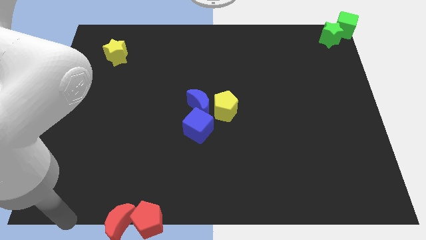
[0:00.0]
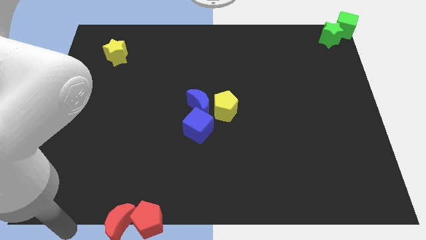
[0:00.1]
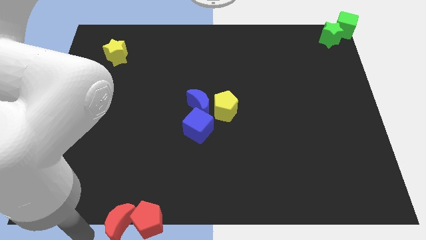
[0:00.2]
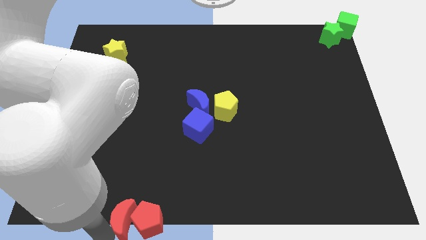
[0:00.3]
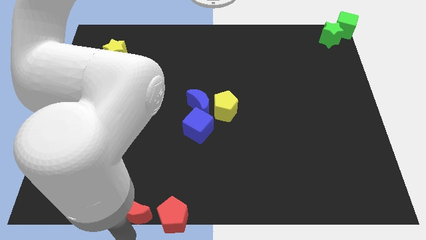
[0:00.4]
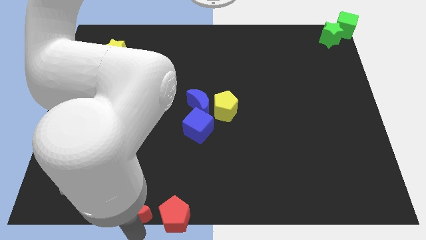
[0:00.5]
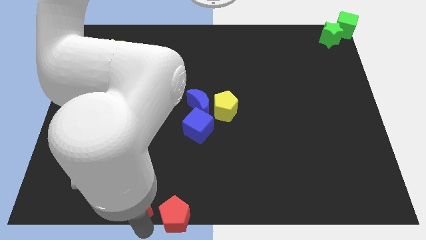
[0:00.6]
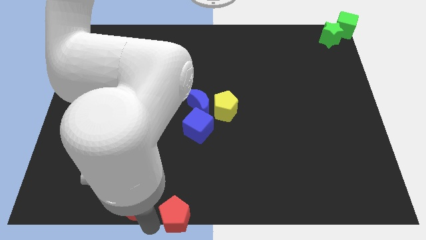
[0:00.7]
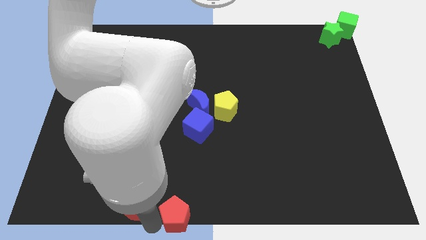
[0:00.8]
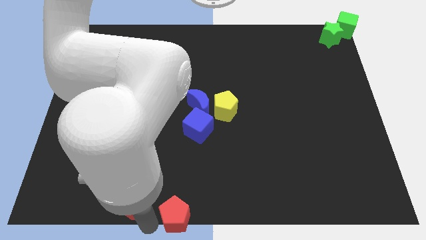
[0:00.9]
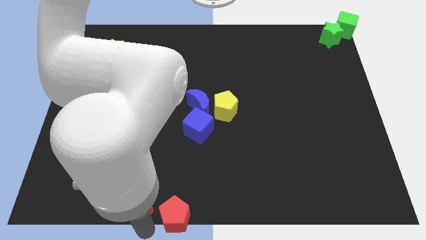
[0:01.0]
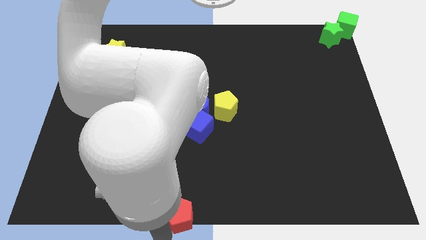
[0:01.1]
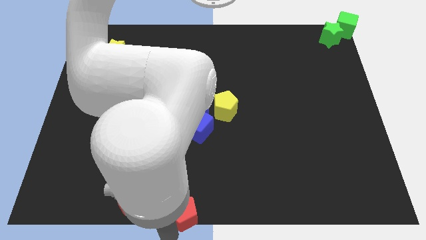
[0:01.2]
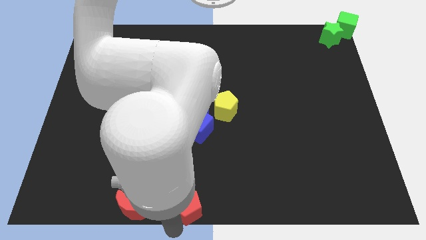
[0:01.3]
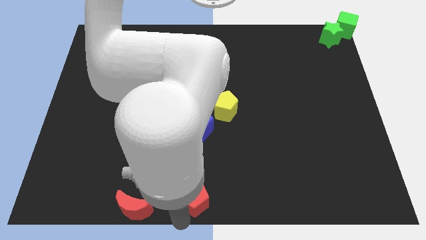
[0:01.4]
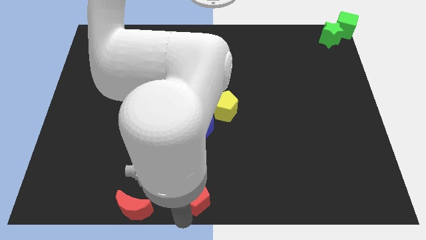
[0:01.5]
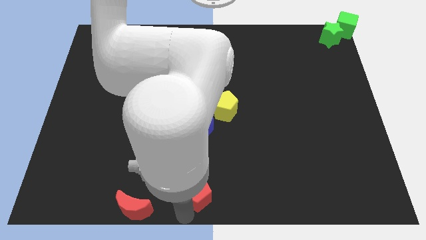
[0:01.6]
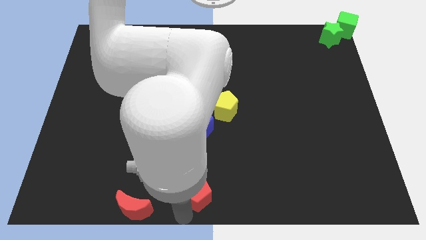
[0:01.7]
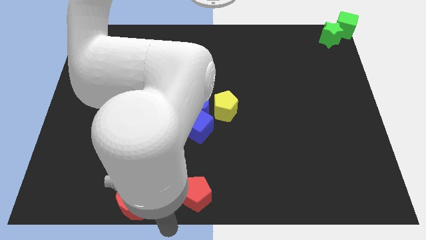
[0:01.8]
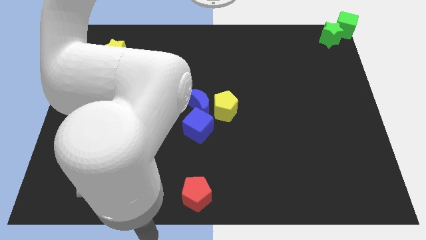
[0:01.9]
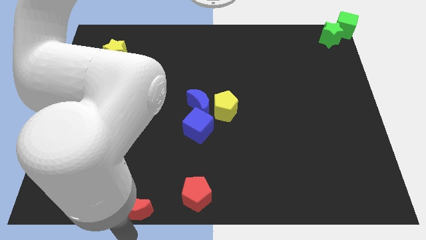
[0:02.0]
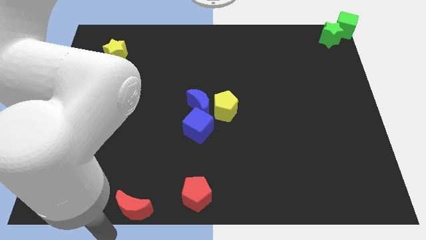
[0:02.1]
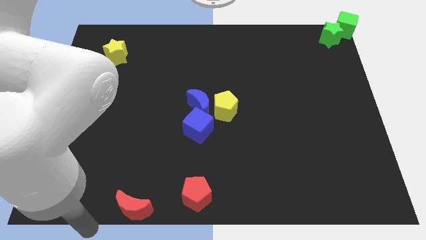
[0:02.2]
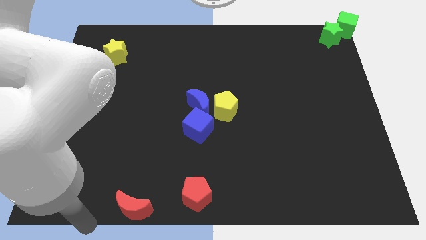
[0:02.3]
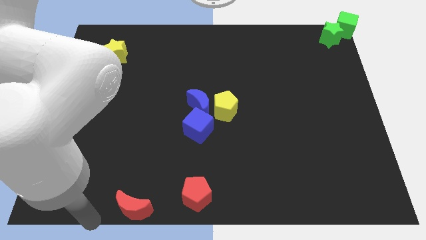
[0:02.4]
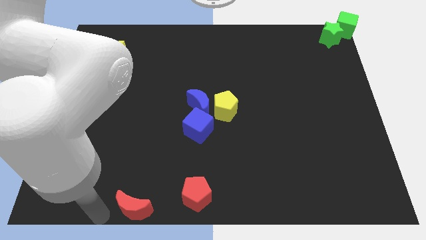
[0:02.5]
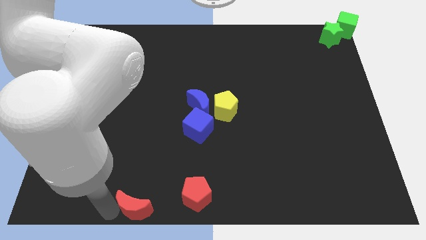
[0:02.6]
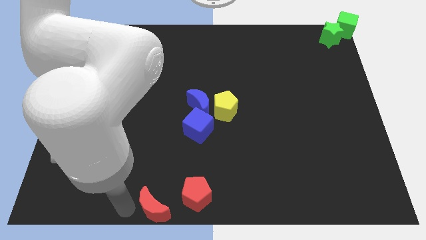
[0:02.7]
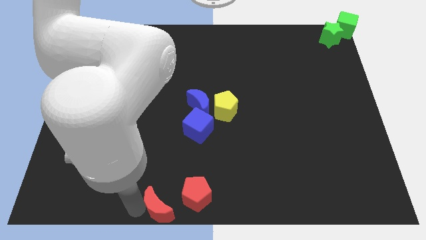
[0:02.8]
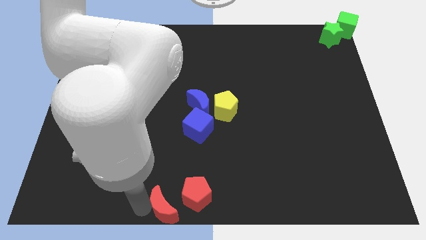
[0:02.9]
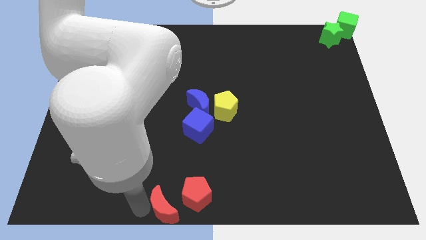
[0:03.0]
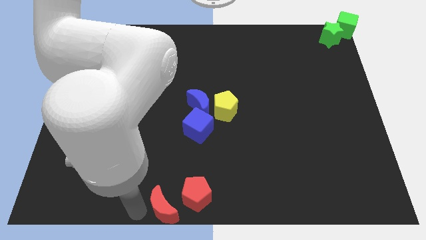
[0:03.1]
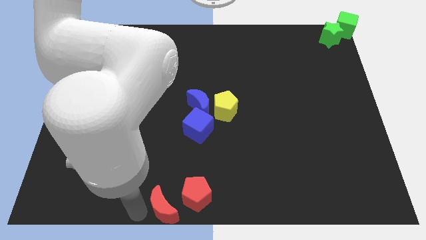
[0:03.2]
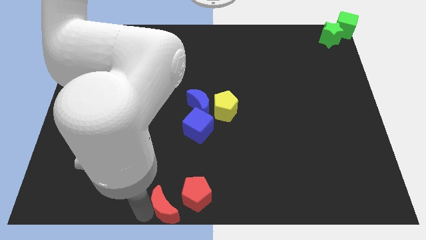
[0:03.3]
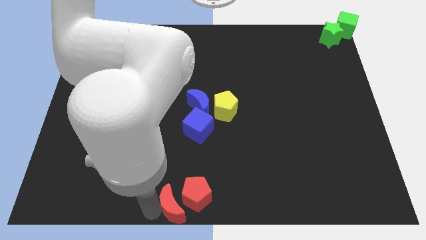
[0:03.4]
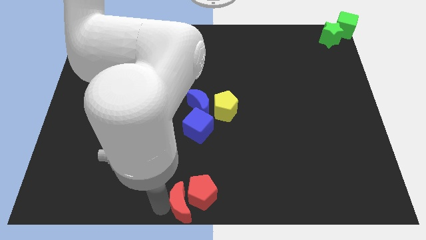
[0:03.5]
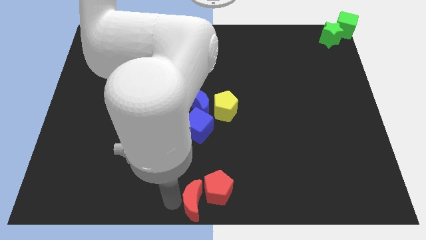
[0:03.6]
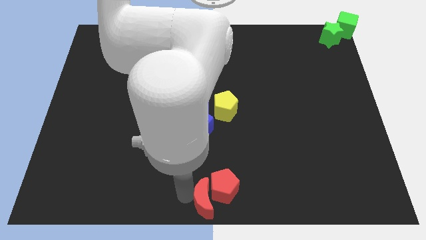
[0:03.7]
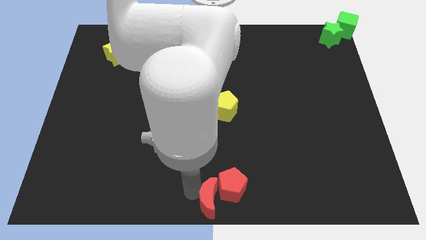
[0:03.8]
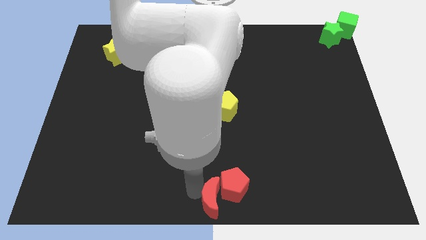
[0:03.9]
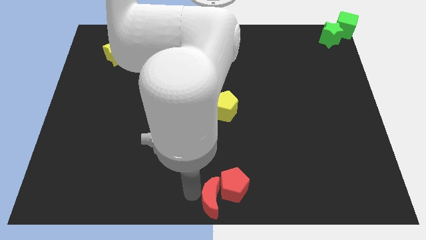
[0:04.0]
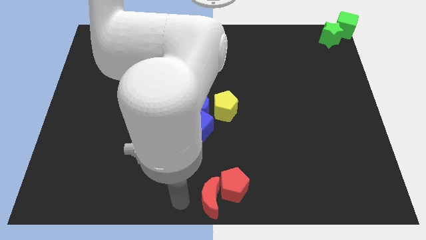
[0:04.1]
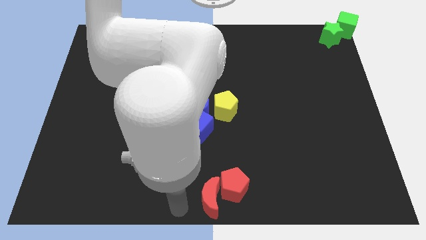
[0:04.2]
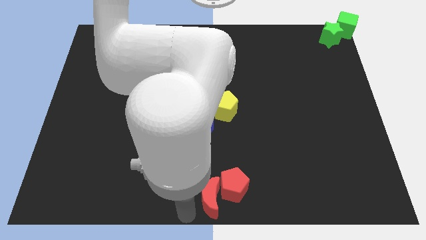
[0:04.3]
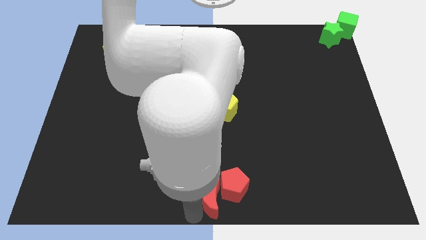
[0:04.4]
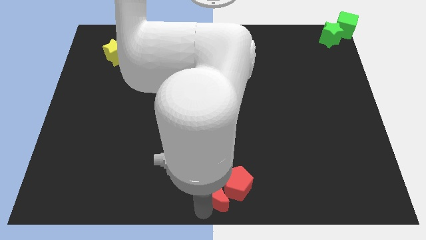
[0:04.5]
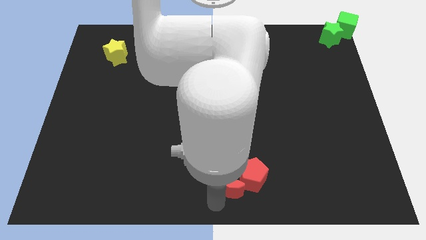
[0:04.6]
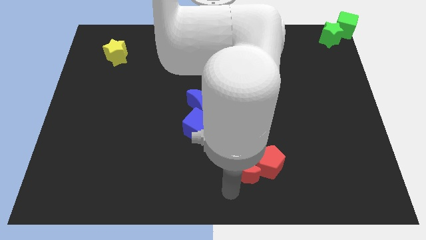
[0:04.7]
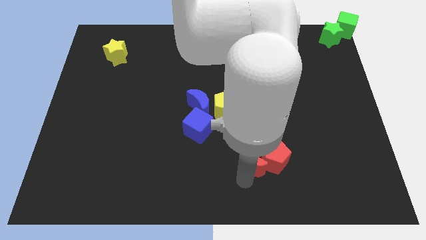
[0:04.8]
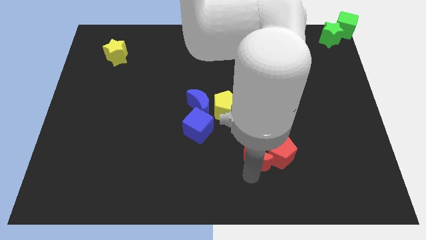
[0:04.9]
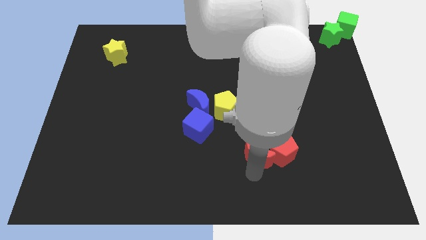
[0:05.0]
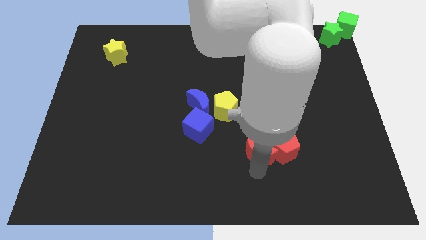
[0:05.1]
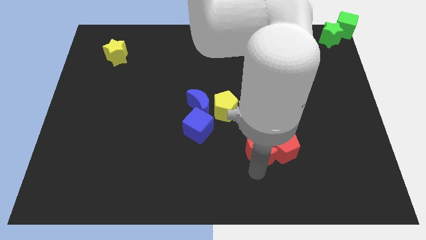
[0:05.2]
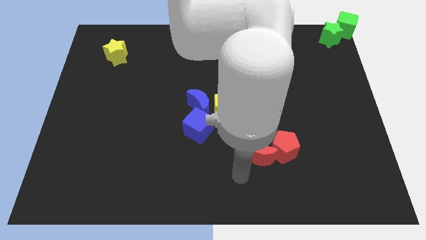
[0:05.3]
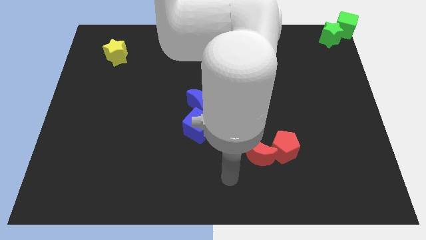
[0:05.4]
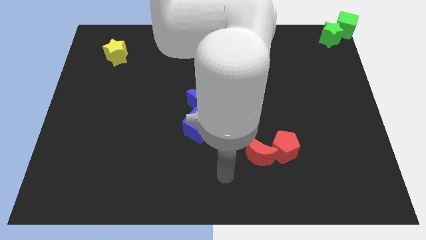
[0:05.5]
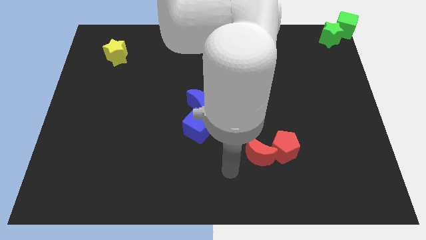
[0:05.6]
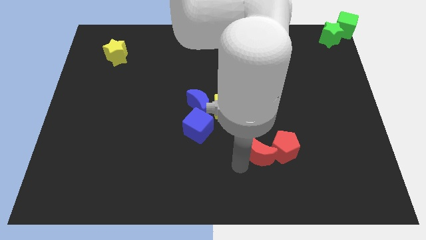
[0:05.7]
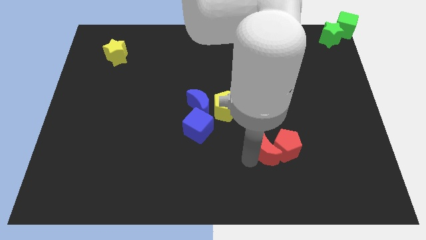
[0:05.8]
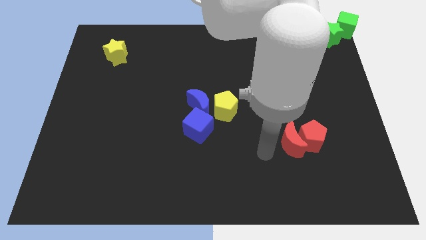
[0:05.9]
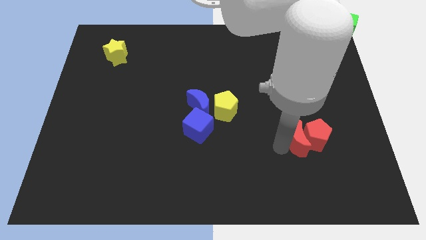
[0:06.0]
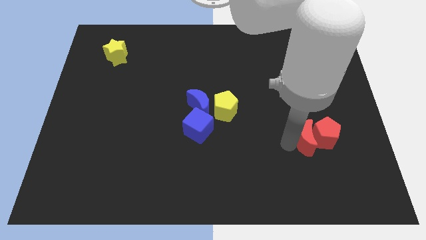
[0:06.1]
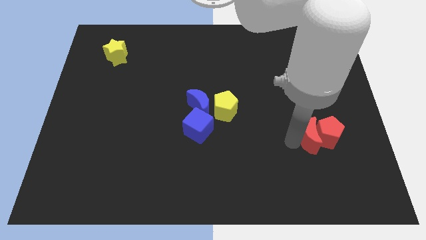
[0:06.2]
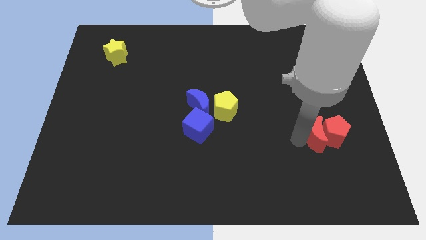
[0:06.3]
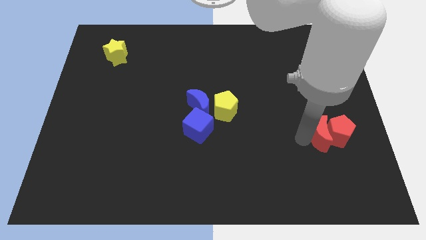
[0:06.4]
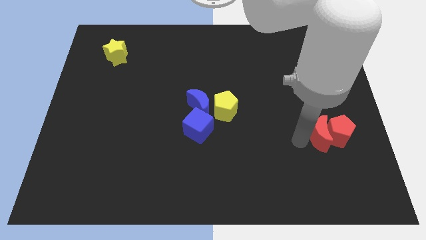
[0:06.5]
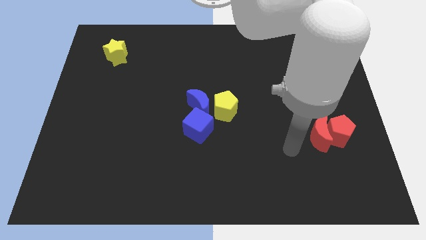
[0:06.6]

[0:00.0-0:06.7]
push two red blocks towards up

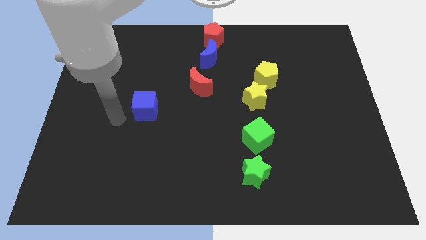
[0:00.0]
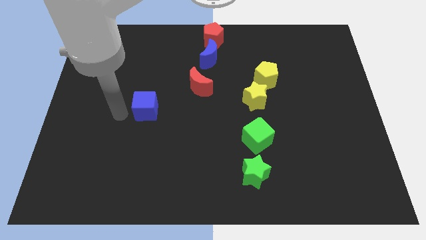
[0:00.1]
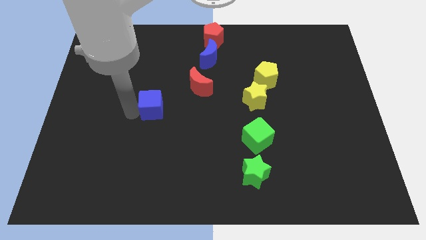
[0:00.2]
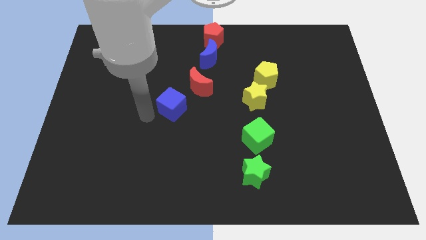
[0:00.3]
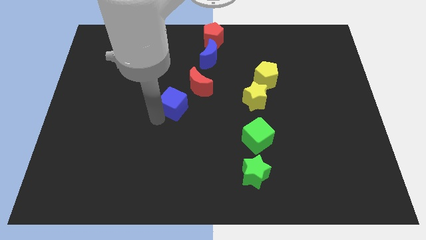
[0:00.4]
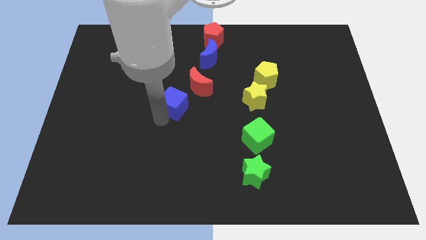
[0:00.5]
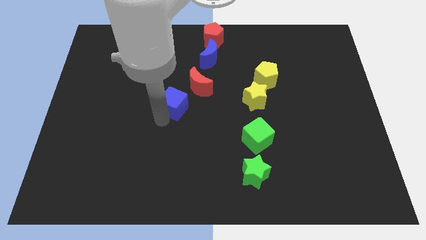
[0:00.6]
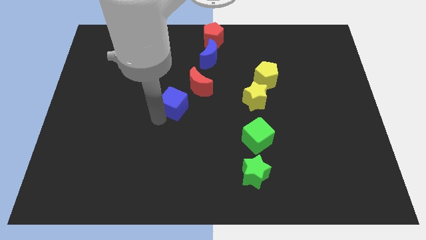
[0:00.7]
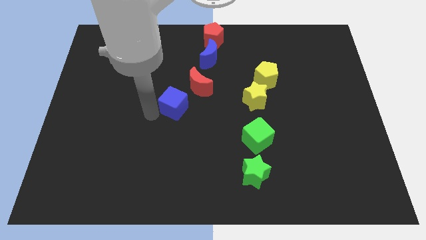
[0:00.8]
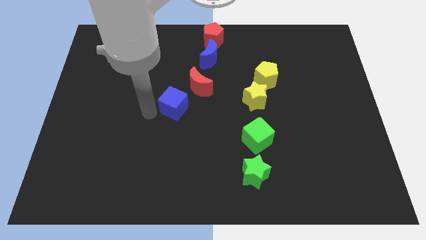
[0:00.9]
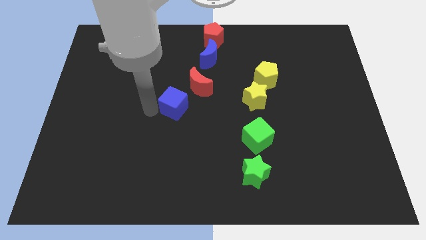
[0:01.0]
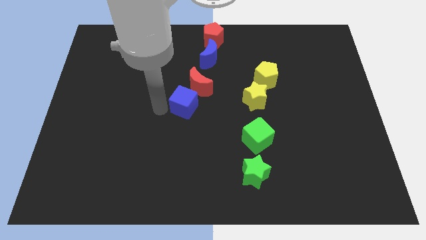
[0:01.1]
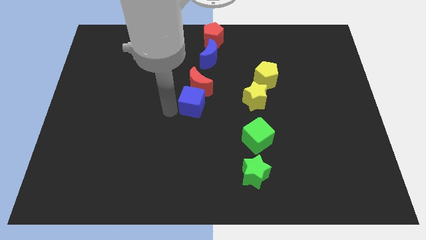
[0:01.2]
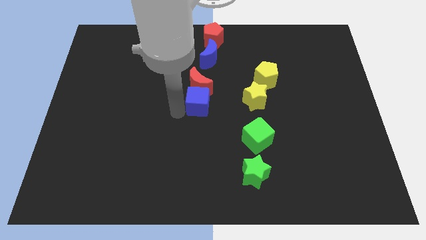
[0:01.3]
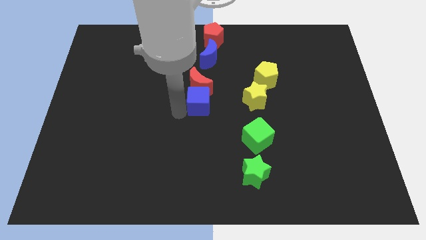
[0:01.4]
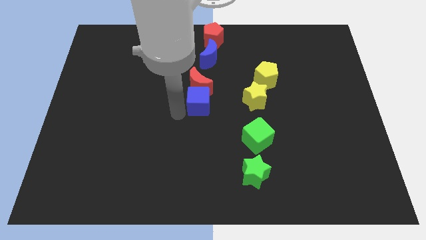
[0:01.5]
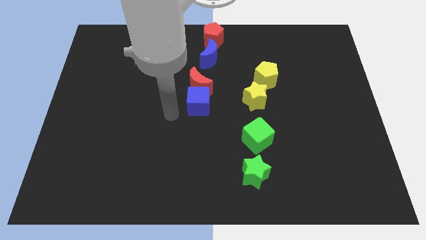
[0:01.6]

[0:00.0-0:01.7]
move the blue cube below to the red crescent

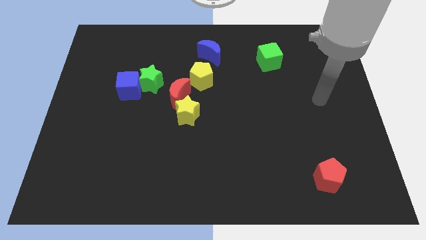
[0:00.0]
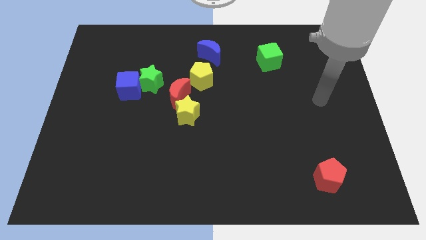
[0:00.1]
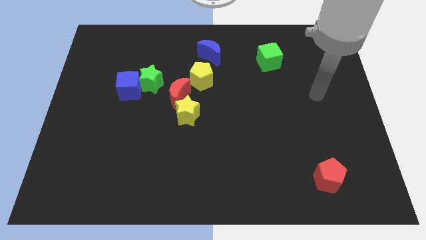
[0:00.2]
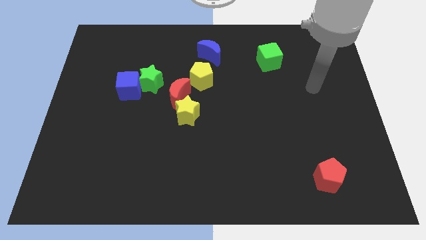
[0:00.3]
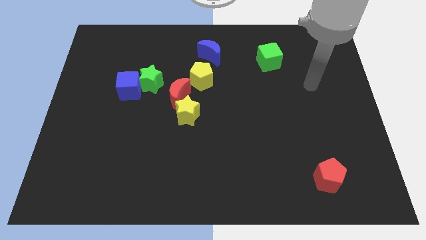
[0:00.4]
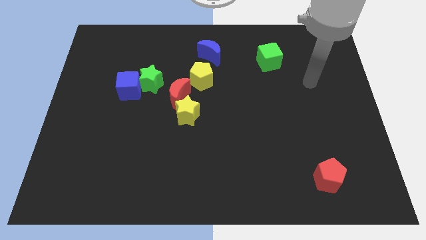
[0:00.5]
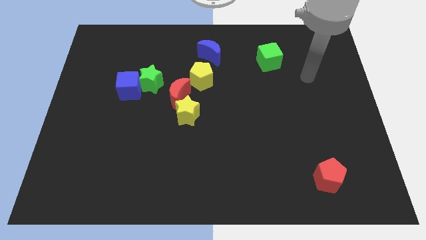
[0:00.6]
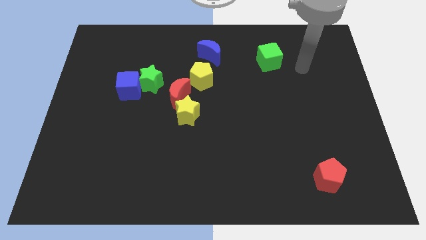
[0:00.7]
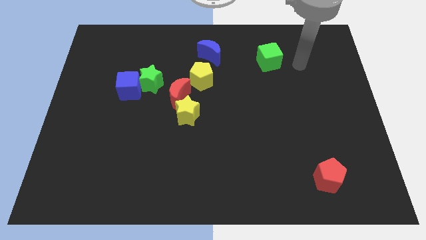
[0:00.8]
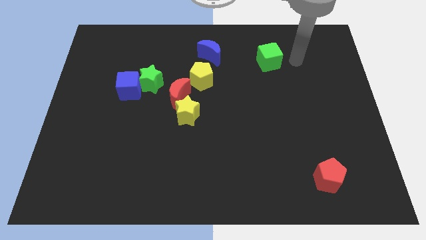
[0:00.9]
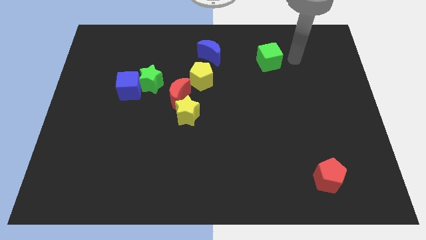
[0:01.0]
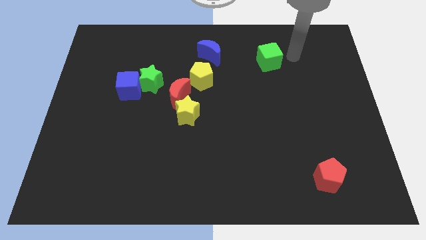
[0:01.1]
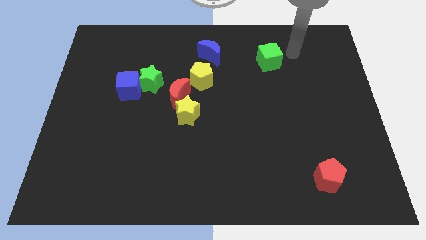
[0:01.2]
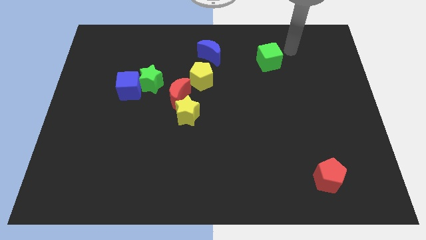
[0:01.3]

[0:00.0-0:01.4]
move your arm towards the green cube
